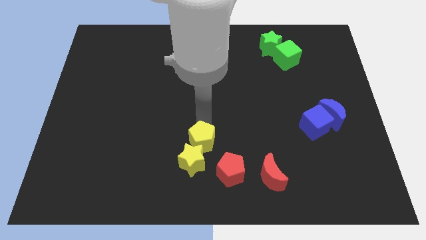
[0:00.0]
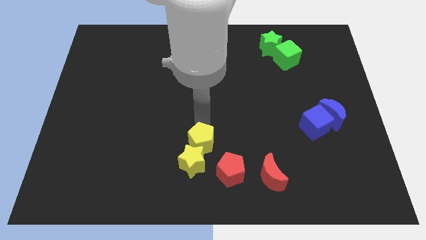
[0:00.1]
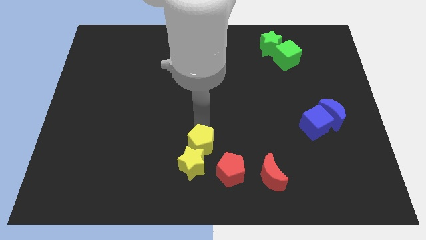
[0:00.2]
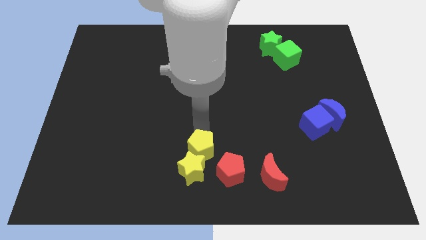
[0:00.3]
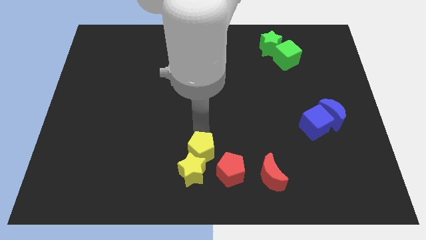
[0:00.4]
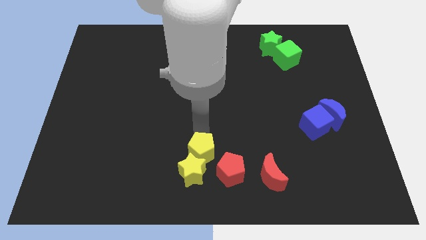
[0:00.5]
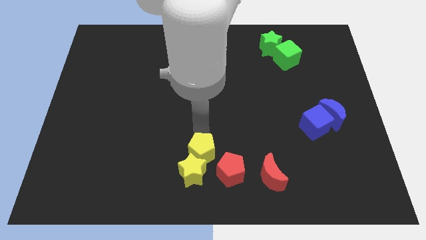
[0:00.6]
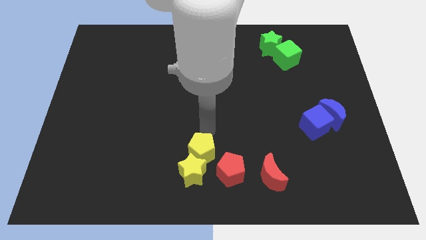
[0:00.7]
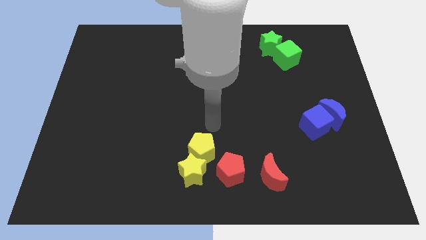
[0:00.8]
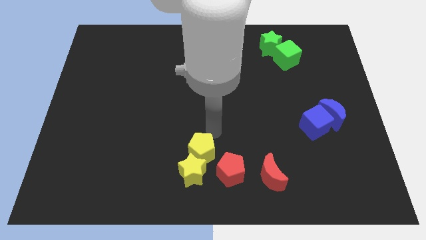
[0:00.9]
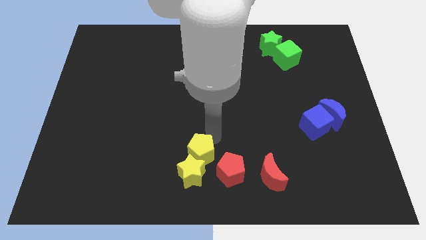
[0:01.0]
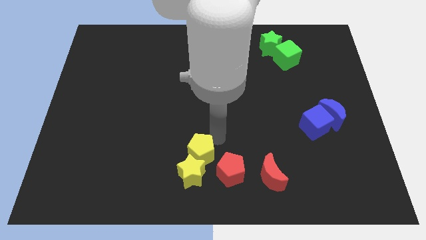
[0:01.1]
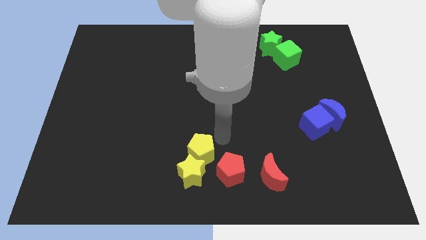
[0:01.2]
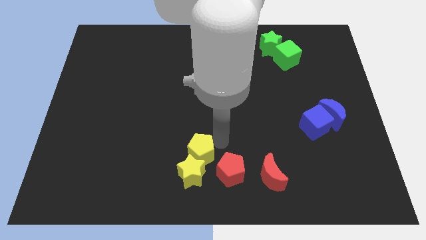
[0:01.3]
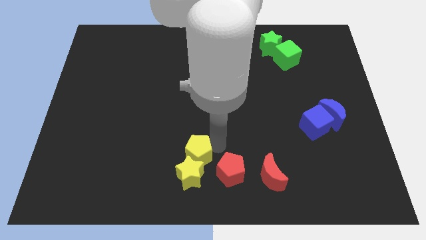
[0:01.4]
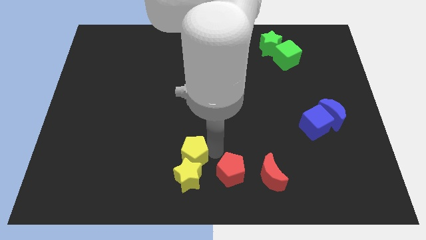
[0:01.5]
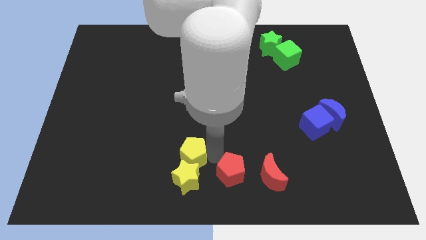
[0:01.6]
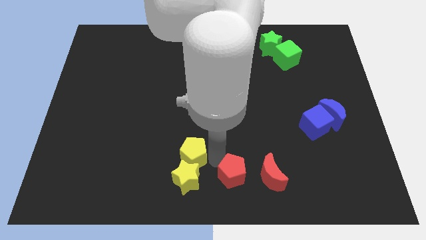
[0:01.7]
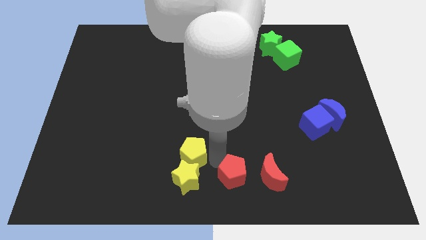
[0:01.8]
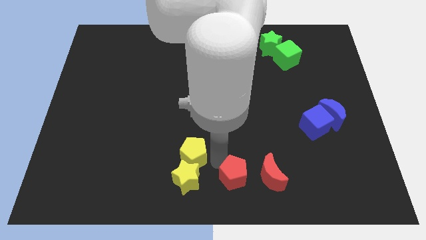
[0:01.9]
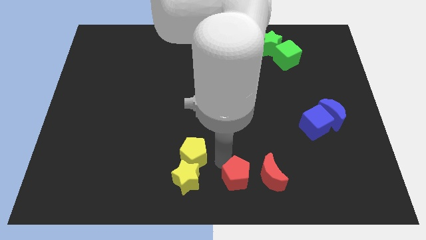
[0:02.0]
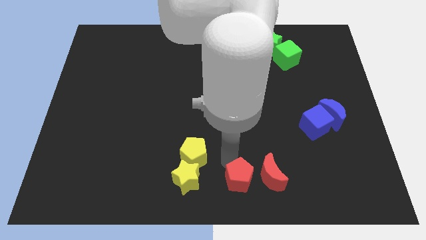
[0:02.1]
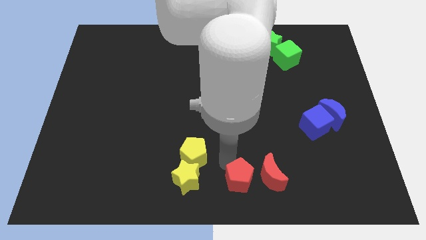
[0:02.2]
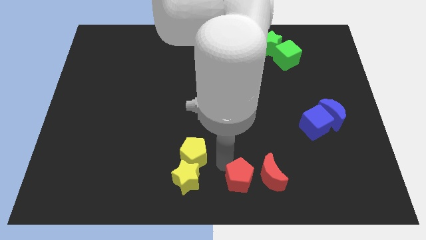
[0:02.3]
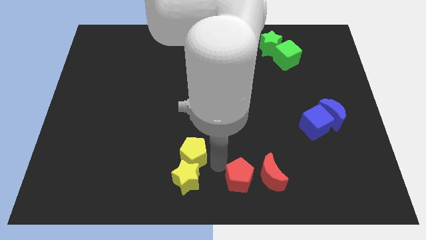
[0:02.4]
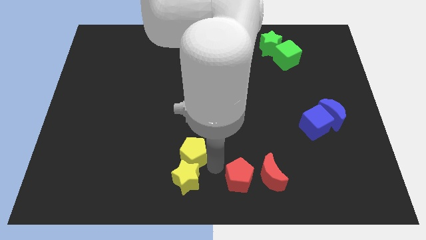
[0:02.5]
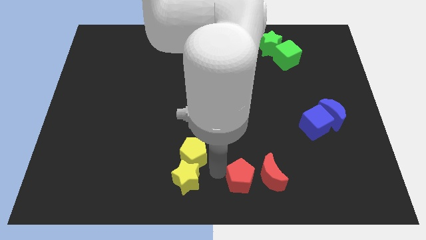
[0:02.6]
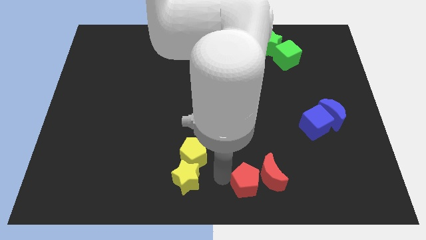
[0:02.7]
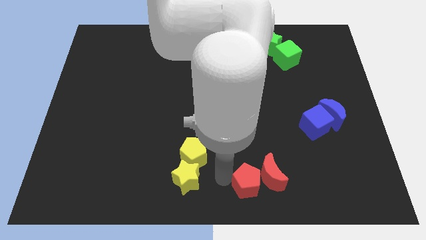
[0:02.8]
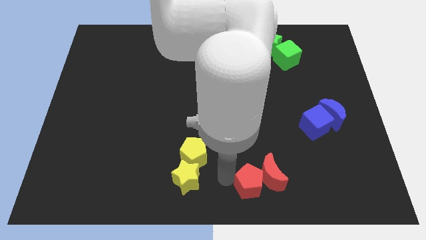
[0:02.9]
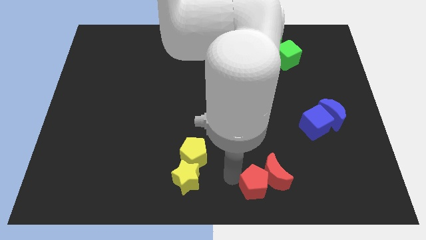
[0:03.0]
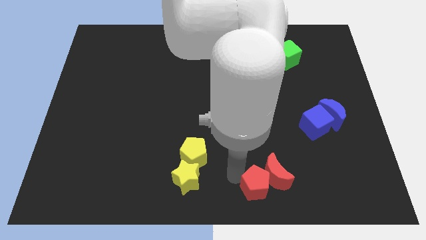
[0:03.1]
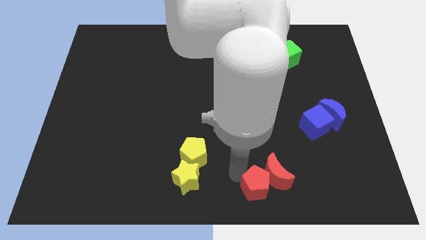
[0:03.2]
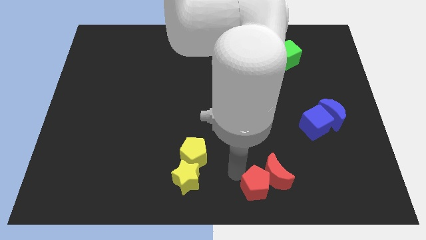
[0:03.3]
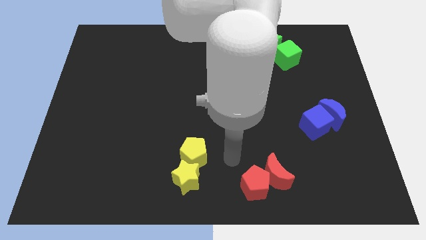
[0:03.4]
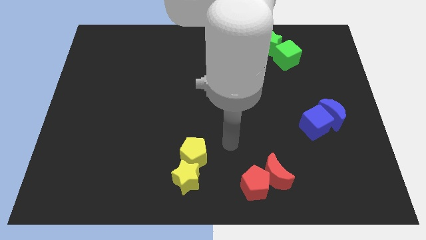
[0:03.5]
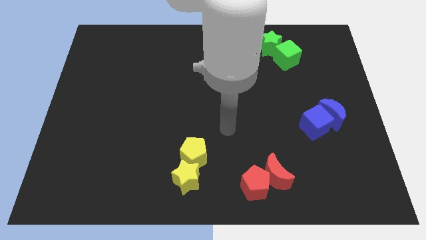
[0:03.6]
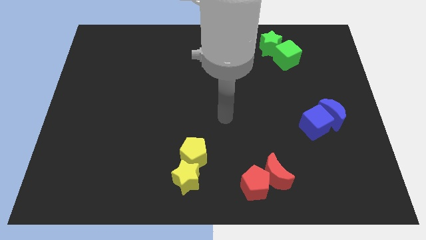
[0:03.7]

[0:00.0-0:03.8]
push the red pentagon to the left of the red crescent

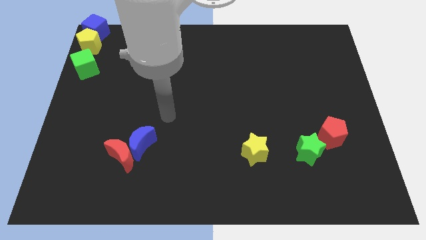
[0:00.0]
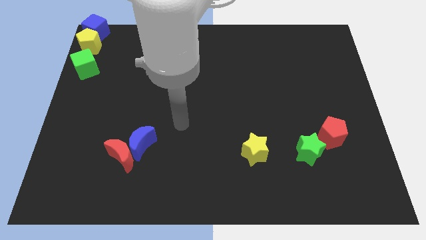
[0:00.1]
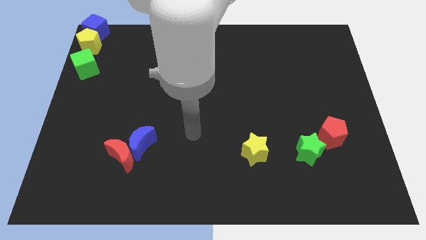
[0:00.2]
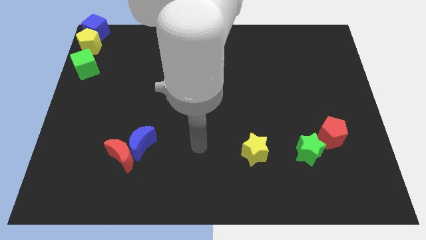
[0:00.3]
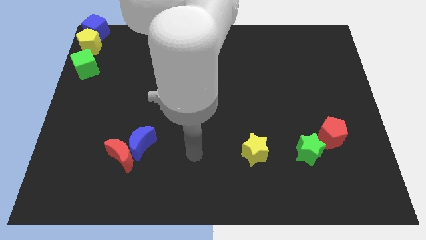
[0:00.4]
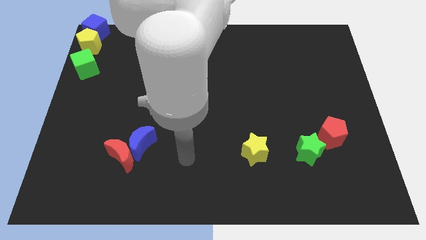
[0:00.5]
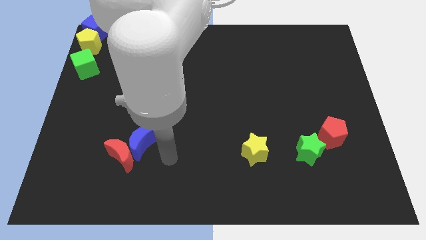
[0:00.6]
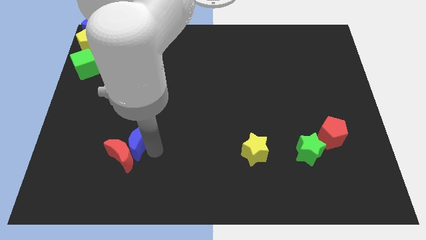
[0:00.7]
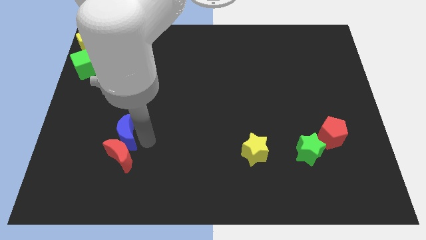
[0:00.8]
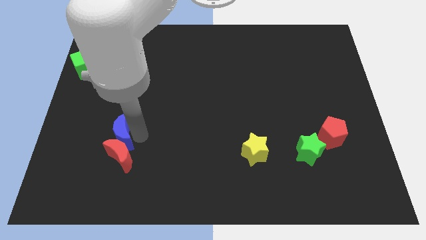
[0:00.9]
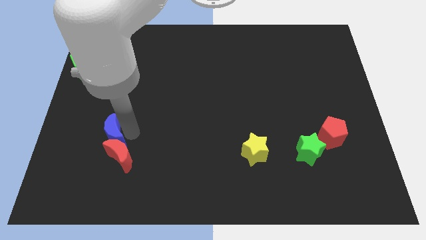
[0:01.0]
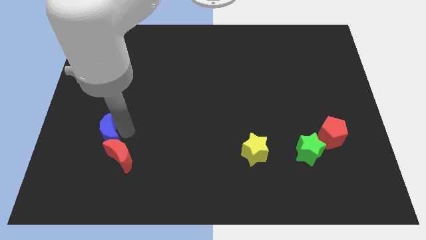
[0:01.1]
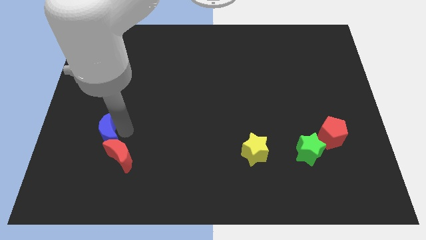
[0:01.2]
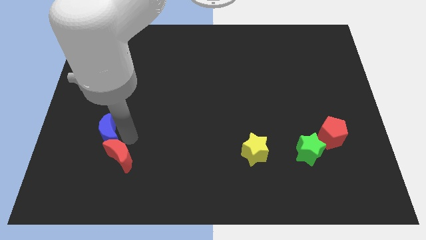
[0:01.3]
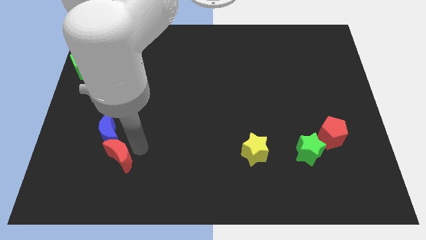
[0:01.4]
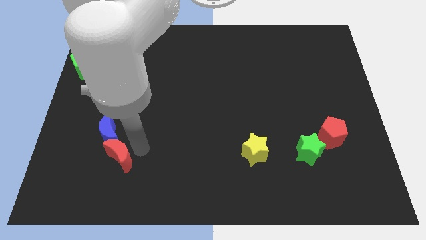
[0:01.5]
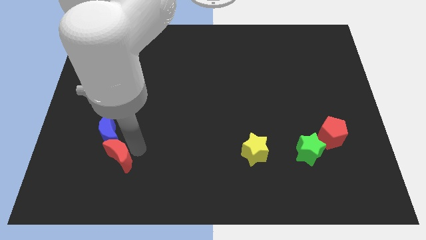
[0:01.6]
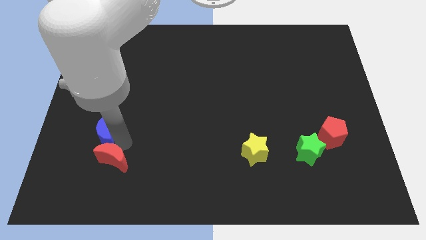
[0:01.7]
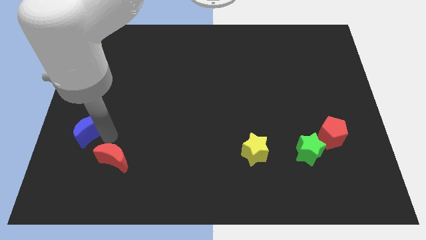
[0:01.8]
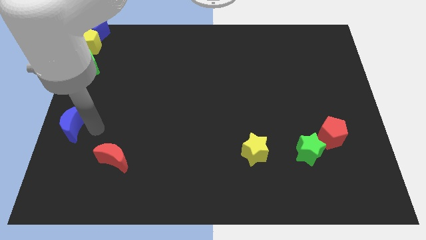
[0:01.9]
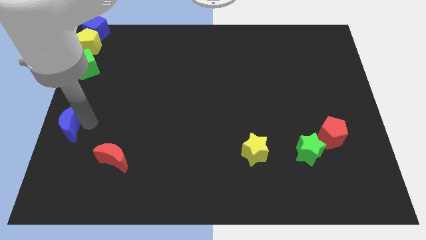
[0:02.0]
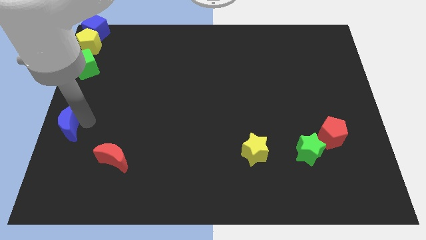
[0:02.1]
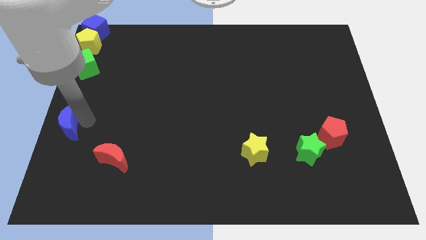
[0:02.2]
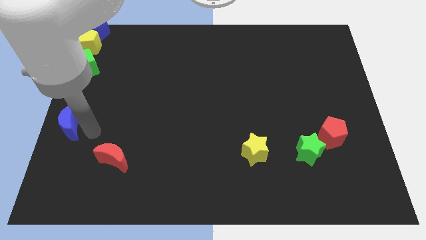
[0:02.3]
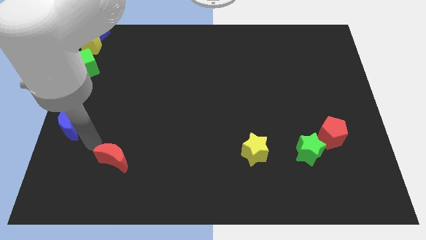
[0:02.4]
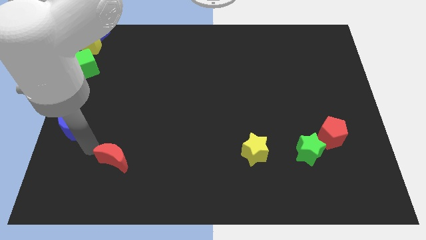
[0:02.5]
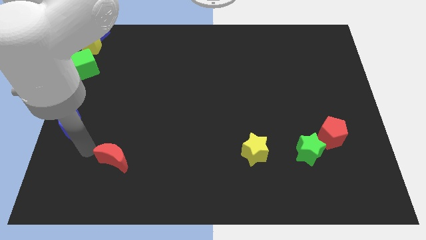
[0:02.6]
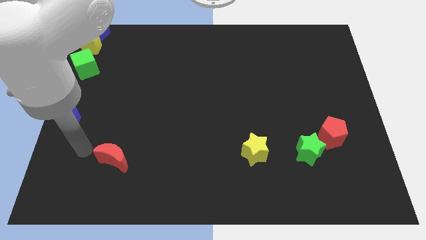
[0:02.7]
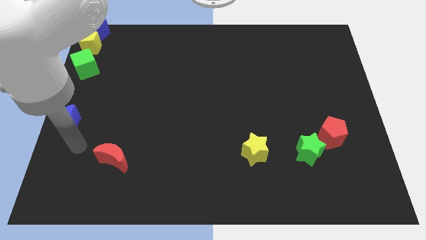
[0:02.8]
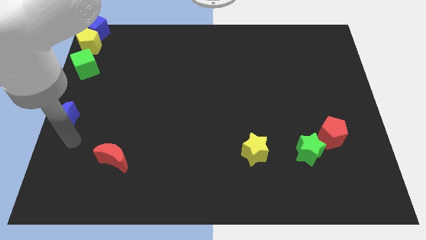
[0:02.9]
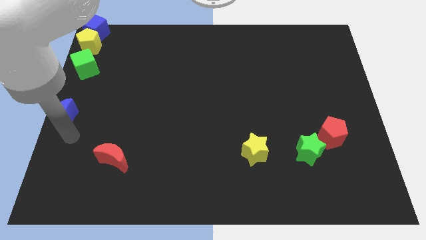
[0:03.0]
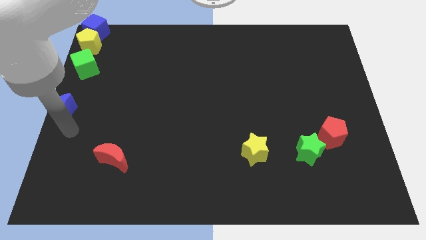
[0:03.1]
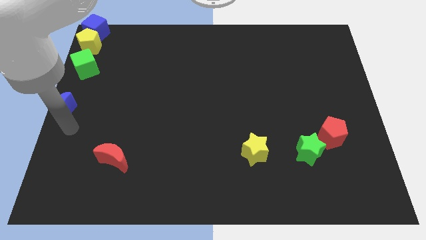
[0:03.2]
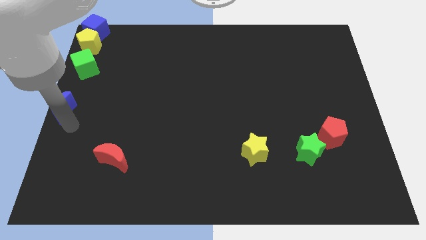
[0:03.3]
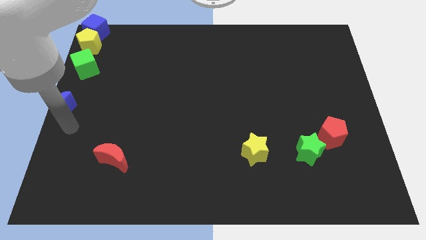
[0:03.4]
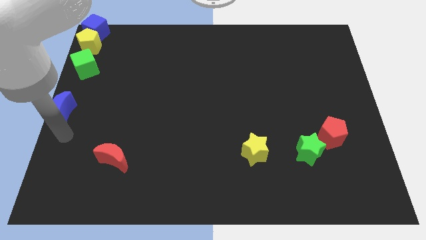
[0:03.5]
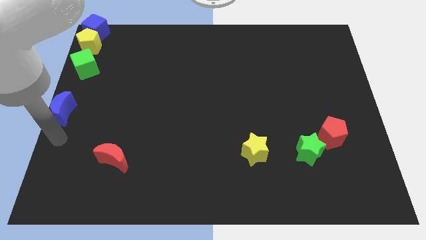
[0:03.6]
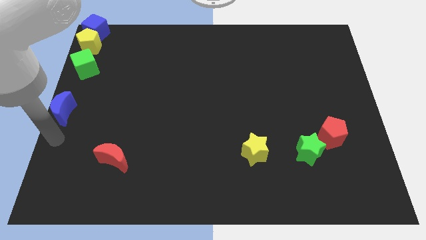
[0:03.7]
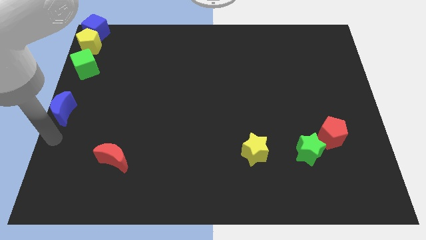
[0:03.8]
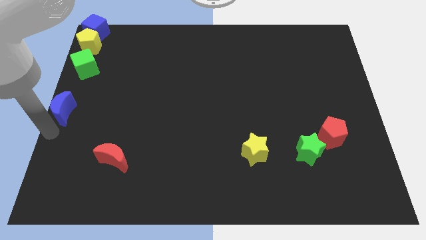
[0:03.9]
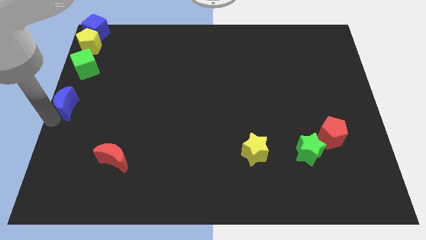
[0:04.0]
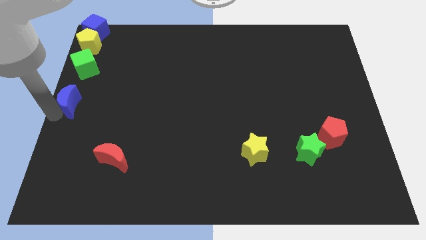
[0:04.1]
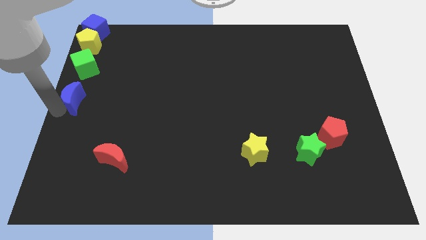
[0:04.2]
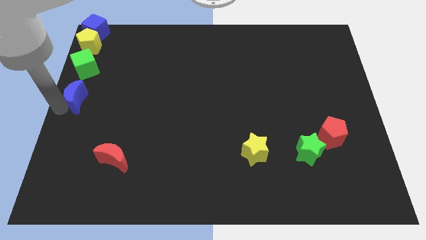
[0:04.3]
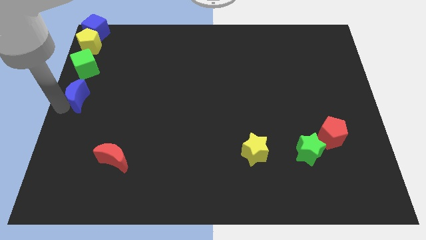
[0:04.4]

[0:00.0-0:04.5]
slide the blue moon below the green cube

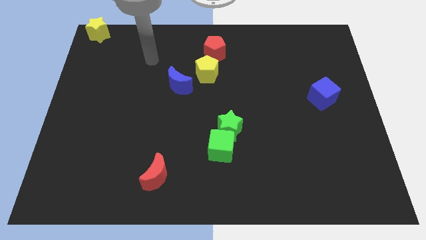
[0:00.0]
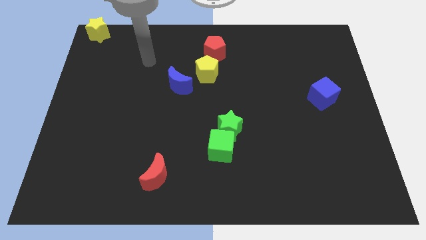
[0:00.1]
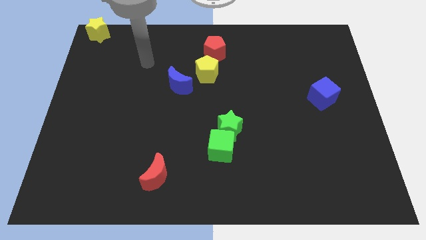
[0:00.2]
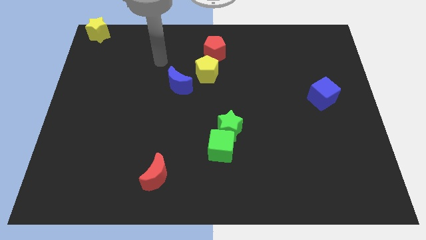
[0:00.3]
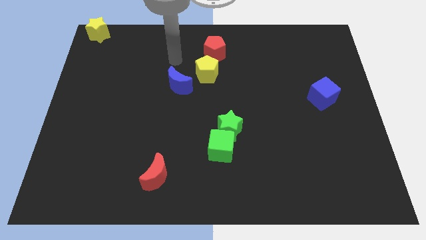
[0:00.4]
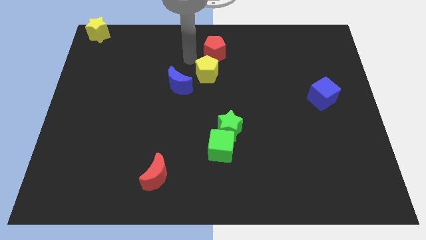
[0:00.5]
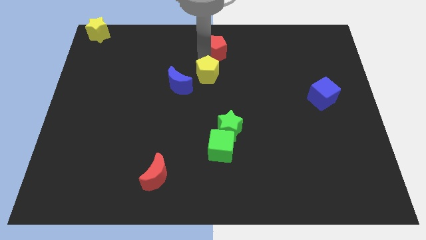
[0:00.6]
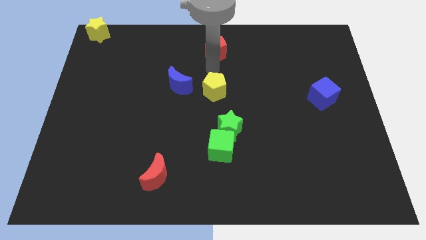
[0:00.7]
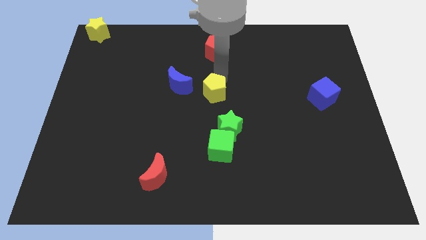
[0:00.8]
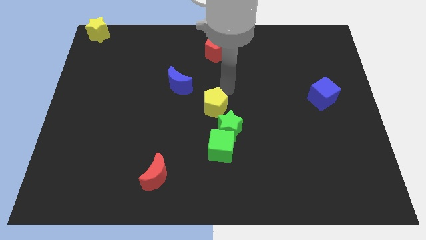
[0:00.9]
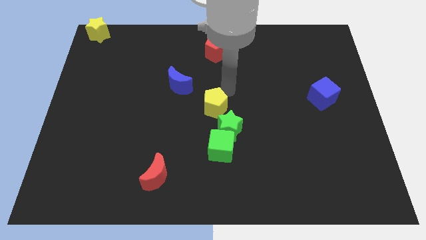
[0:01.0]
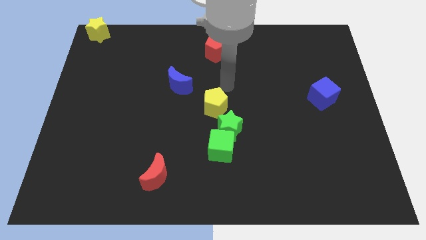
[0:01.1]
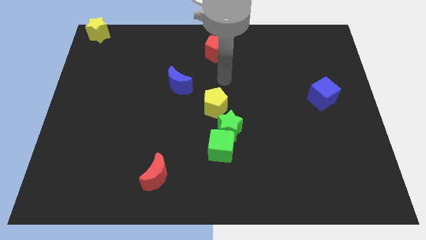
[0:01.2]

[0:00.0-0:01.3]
move the yellow pentagon near to the green star
